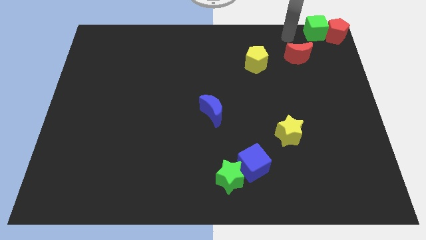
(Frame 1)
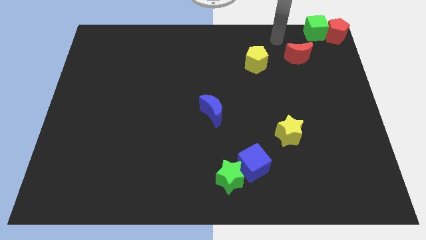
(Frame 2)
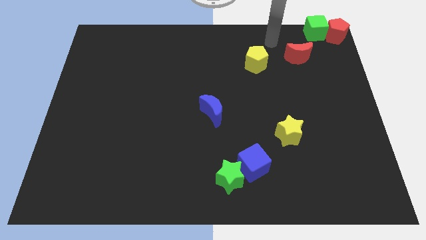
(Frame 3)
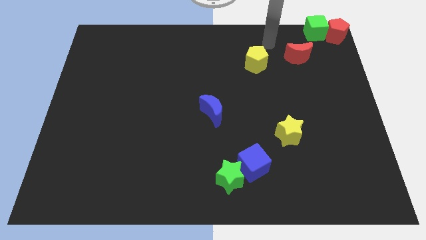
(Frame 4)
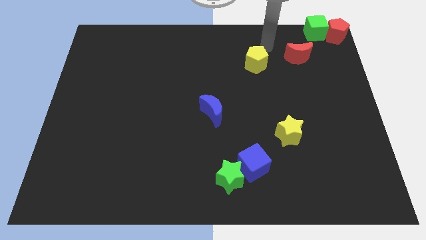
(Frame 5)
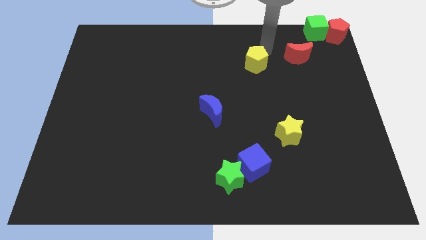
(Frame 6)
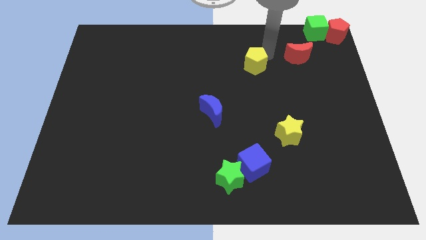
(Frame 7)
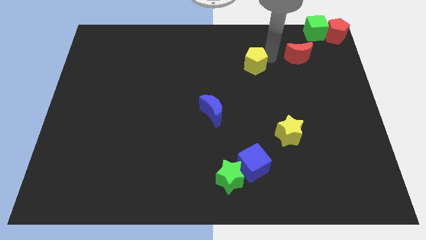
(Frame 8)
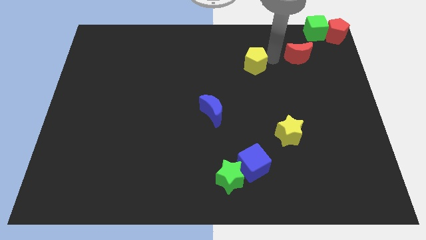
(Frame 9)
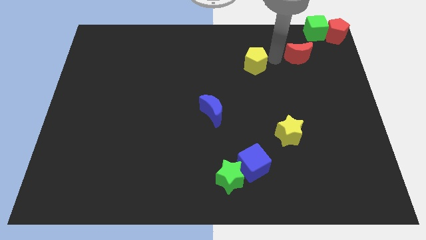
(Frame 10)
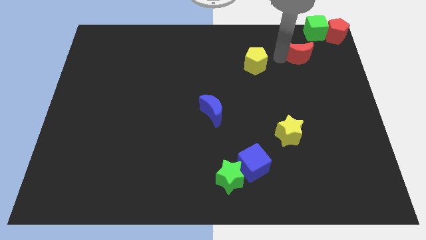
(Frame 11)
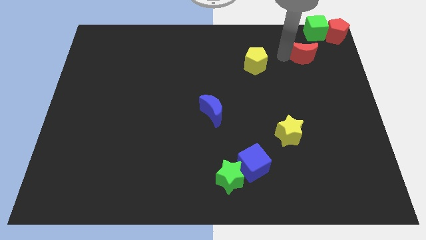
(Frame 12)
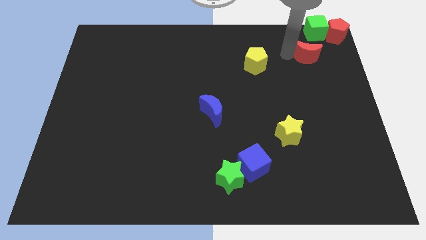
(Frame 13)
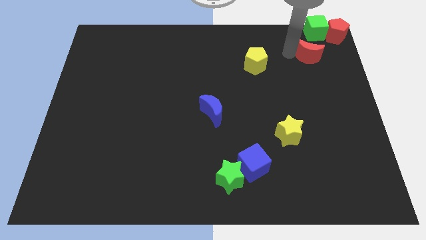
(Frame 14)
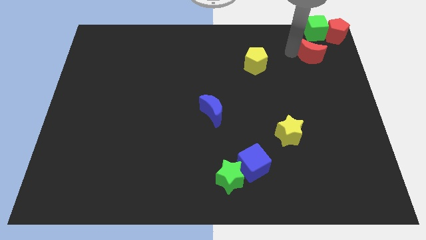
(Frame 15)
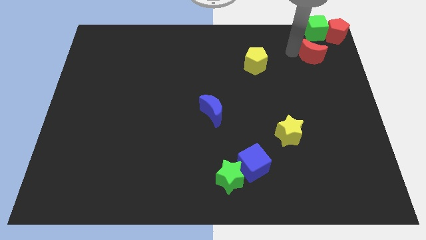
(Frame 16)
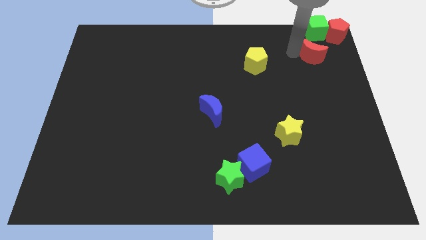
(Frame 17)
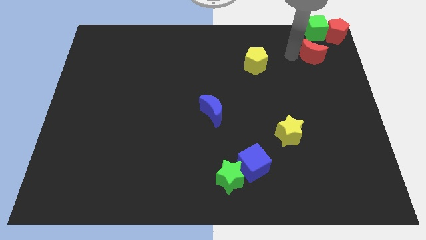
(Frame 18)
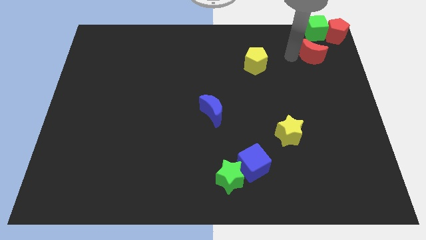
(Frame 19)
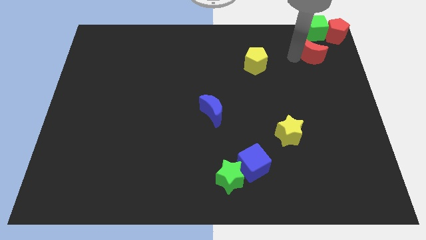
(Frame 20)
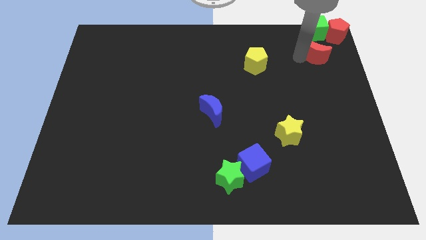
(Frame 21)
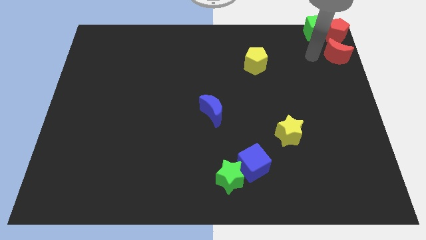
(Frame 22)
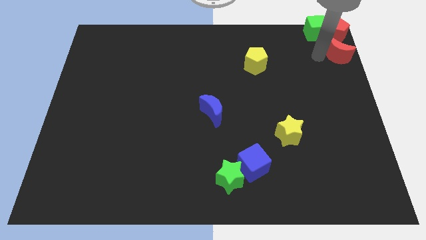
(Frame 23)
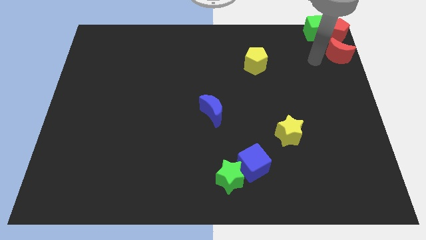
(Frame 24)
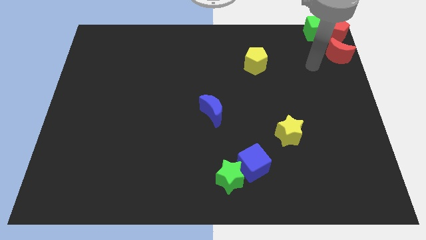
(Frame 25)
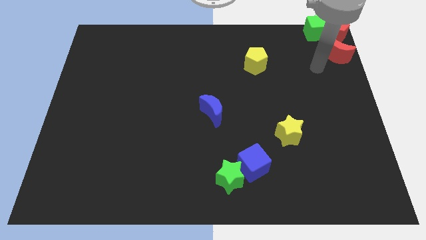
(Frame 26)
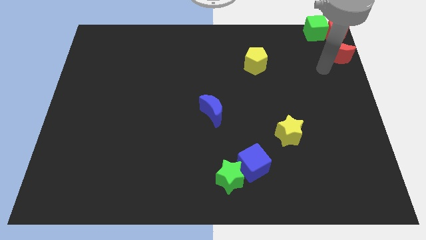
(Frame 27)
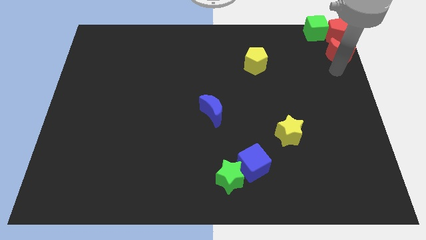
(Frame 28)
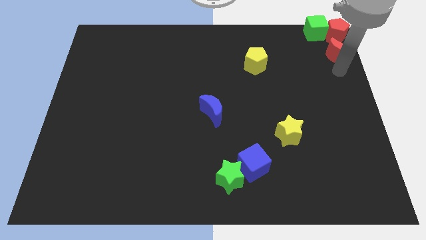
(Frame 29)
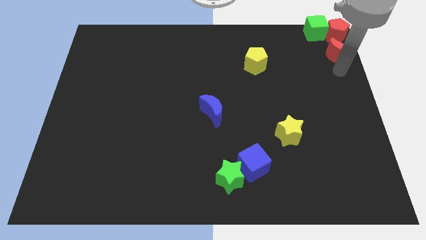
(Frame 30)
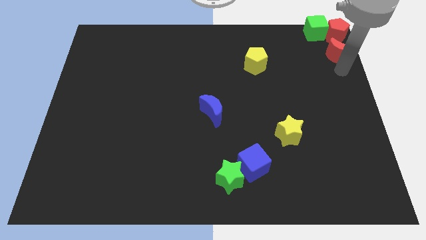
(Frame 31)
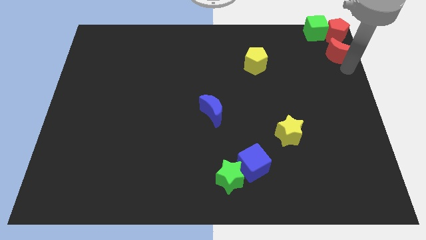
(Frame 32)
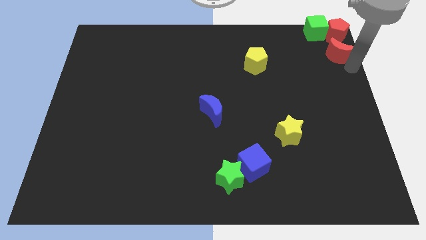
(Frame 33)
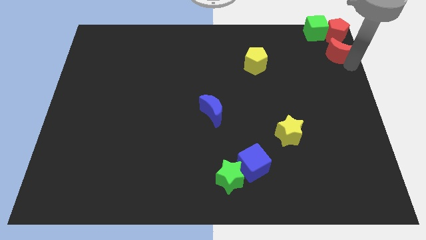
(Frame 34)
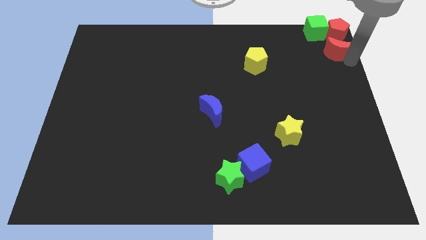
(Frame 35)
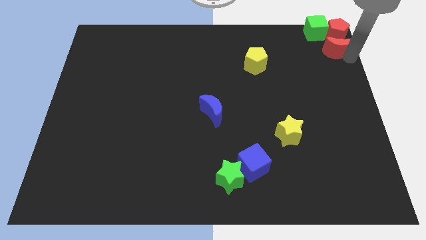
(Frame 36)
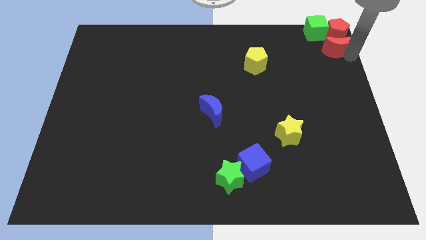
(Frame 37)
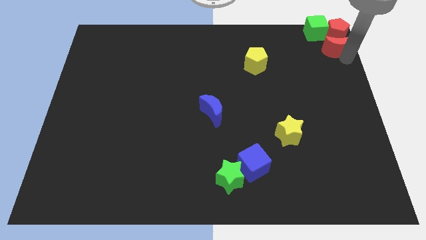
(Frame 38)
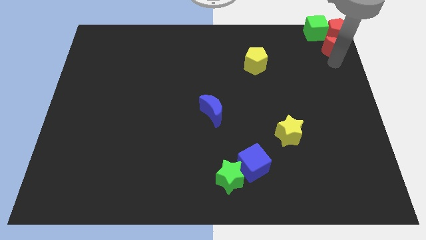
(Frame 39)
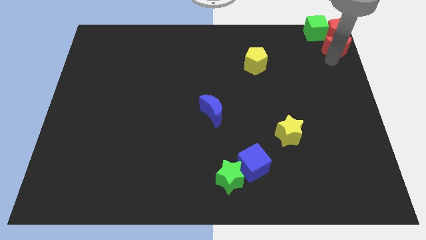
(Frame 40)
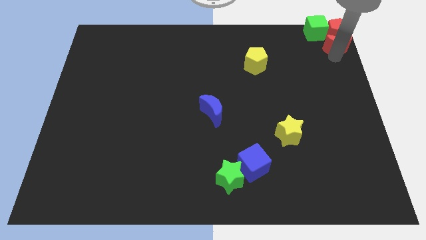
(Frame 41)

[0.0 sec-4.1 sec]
place the red crescent below the red pentagon

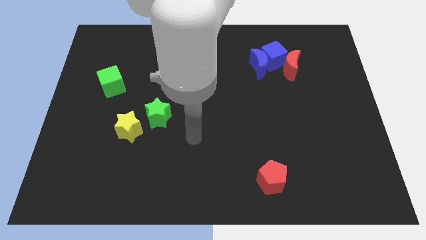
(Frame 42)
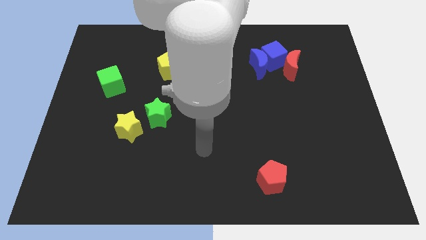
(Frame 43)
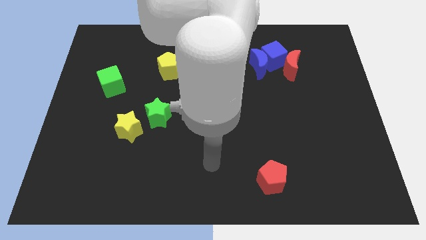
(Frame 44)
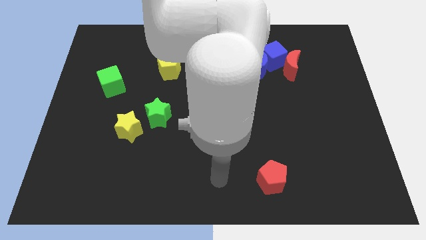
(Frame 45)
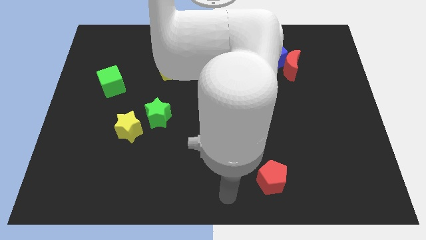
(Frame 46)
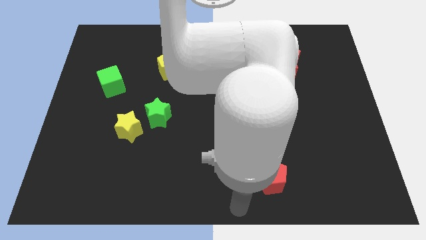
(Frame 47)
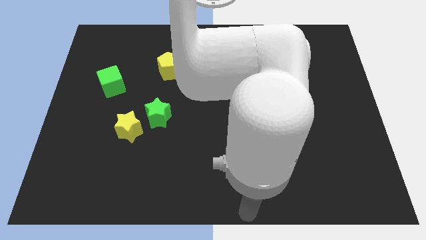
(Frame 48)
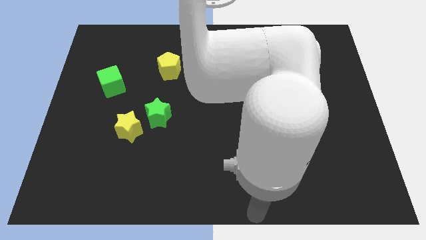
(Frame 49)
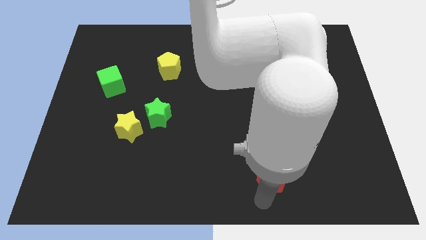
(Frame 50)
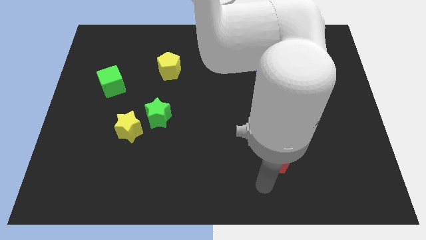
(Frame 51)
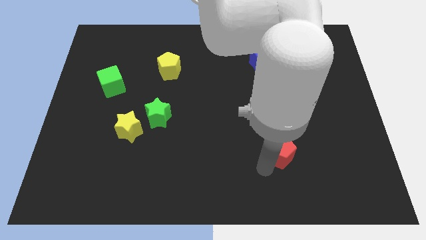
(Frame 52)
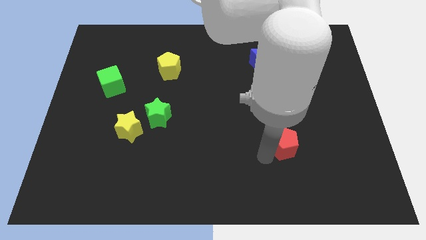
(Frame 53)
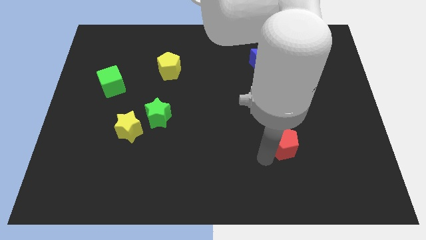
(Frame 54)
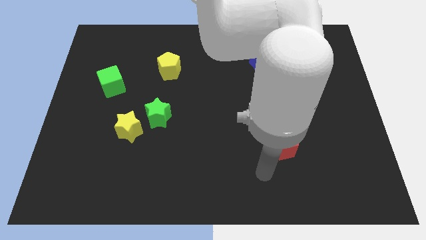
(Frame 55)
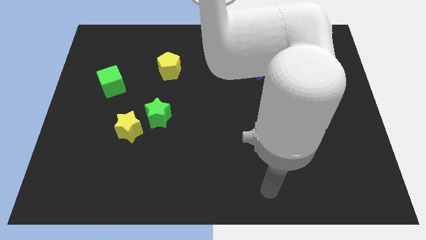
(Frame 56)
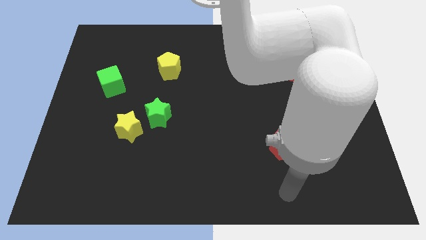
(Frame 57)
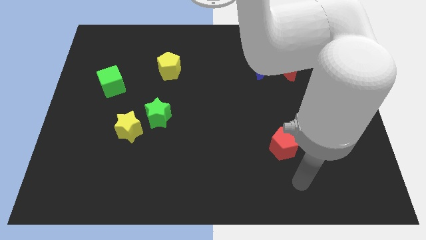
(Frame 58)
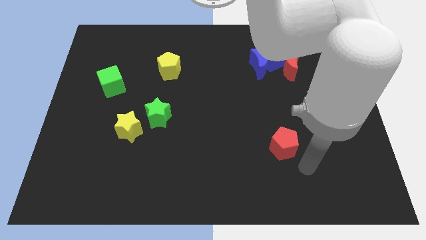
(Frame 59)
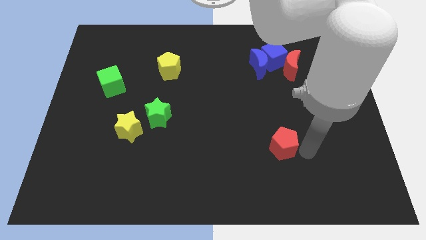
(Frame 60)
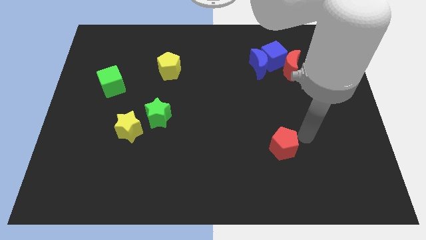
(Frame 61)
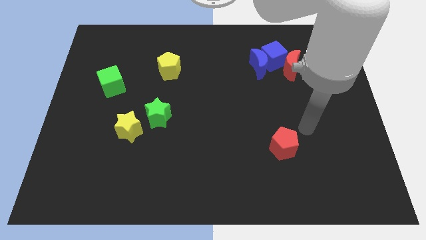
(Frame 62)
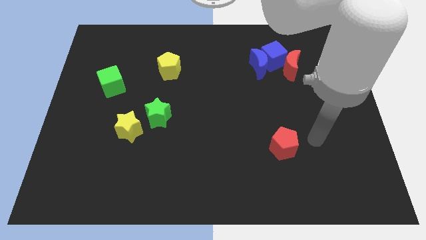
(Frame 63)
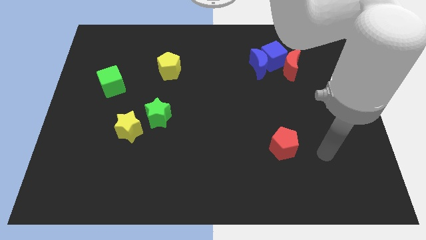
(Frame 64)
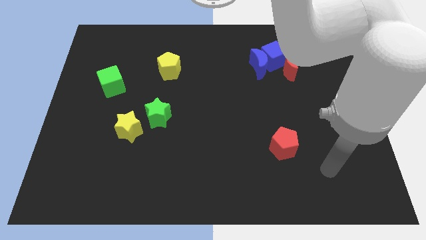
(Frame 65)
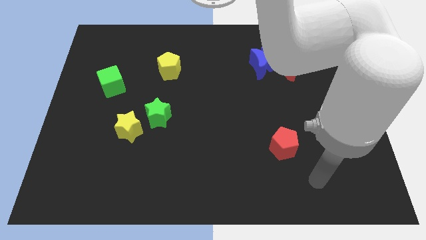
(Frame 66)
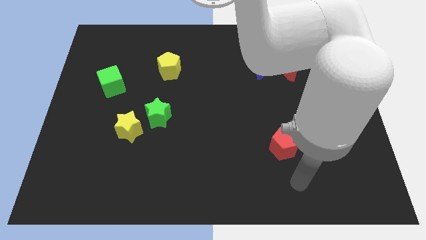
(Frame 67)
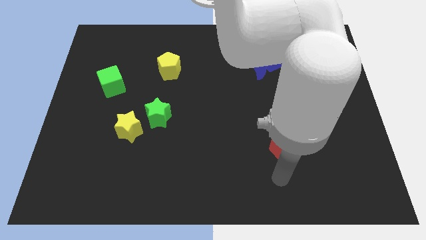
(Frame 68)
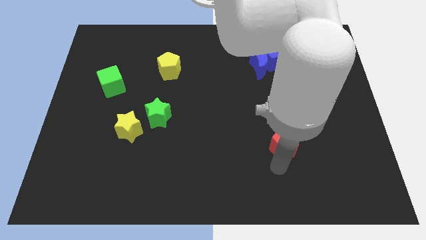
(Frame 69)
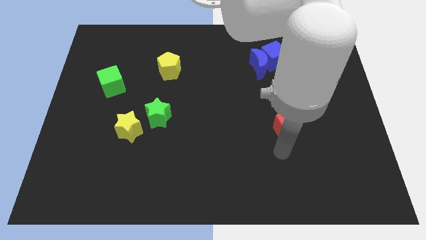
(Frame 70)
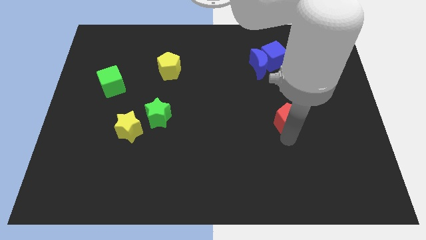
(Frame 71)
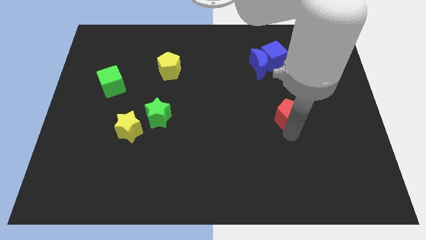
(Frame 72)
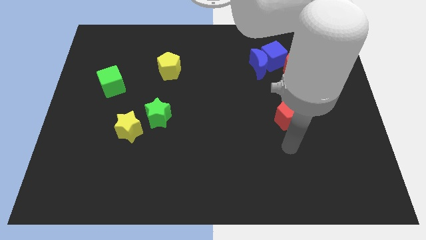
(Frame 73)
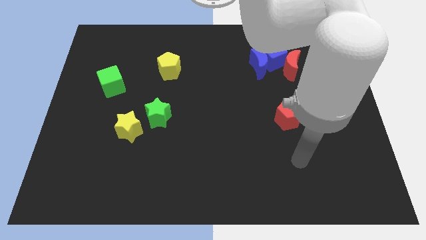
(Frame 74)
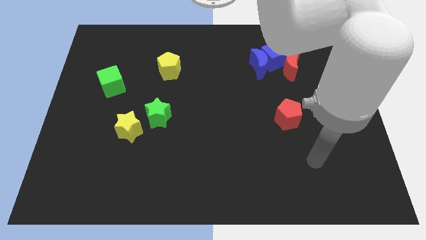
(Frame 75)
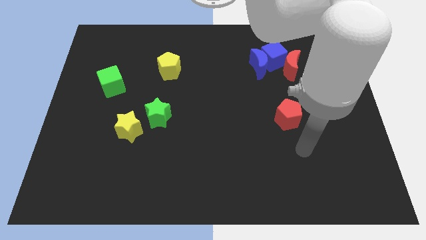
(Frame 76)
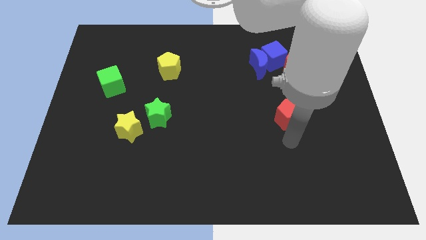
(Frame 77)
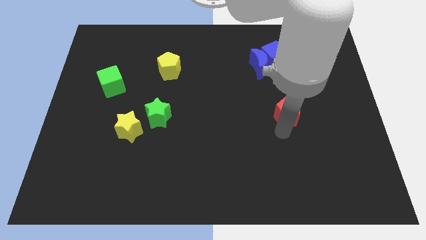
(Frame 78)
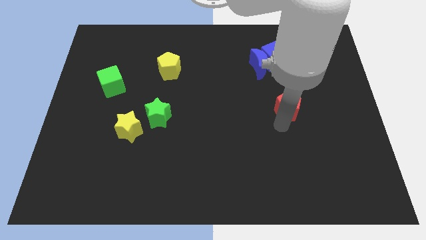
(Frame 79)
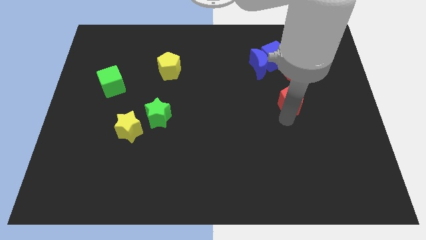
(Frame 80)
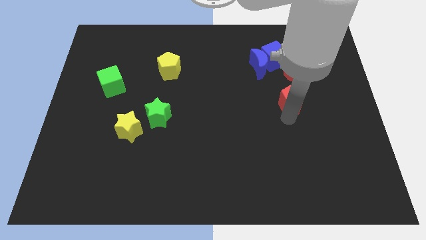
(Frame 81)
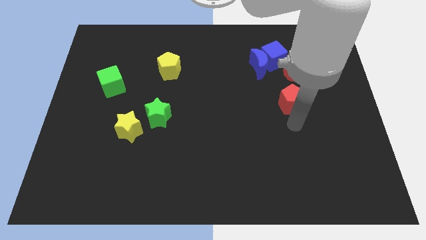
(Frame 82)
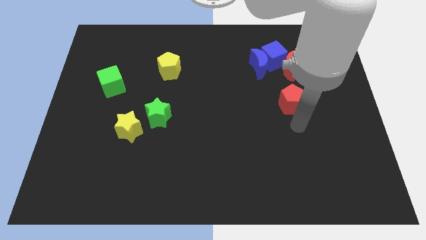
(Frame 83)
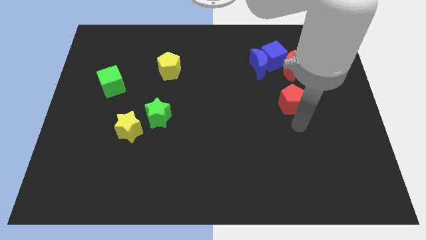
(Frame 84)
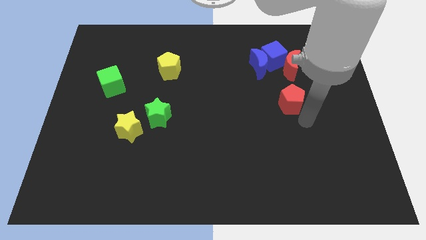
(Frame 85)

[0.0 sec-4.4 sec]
push the red pentagon to the top of the board

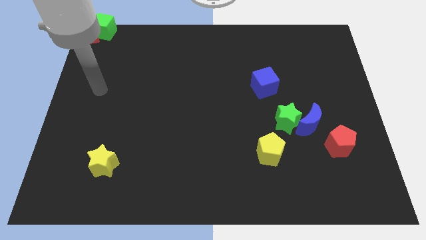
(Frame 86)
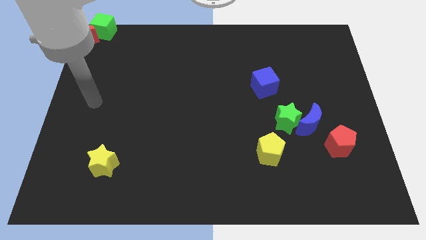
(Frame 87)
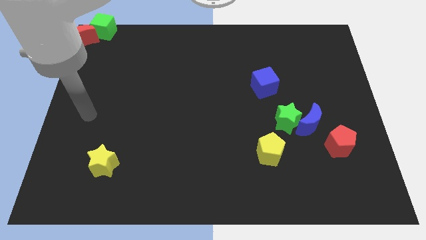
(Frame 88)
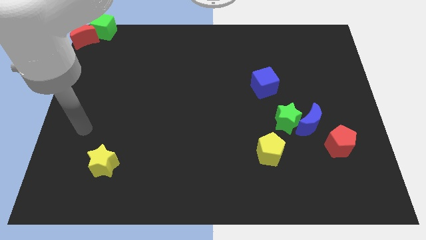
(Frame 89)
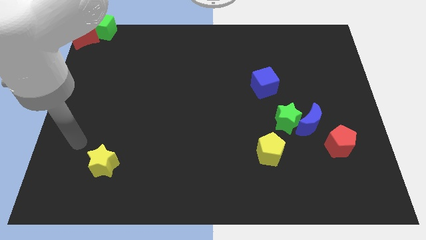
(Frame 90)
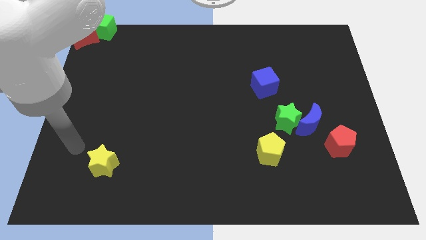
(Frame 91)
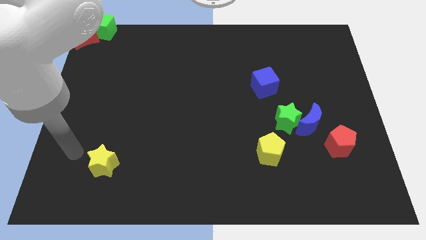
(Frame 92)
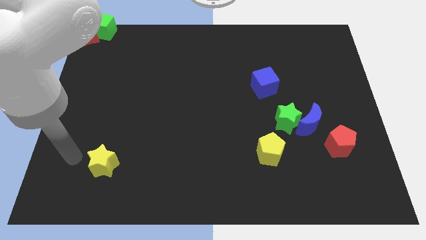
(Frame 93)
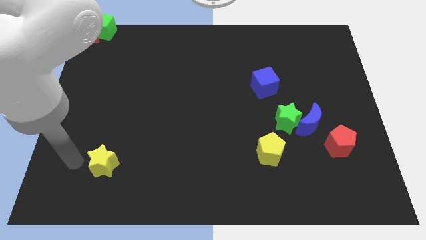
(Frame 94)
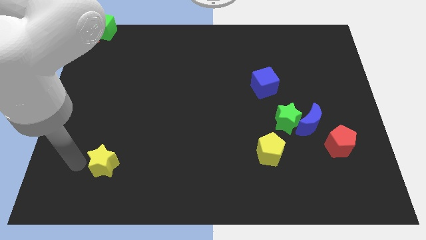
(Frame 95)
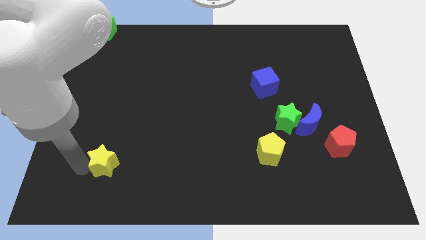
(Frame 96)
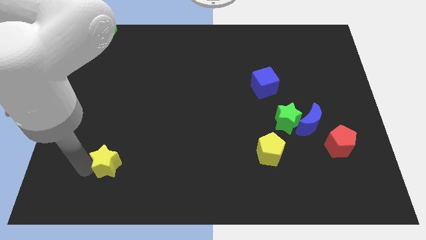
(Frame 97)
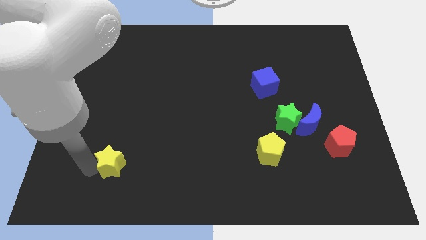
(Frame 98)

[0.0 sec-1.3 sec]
touch the yellow star on its left side
